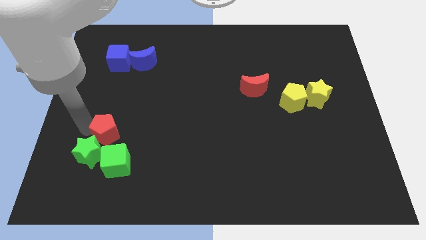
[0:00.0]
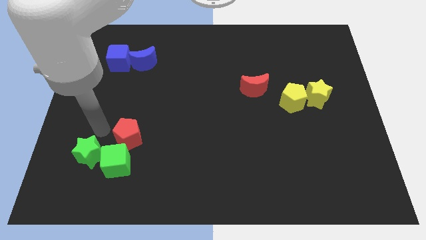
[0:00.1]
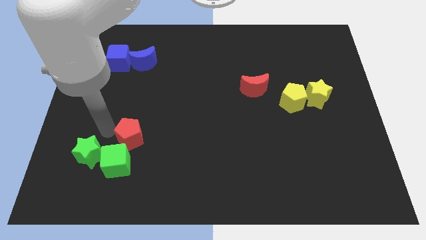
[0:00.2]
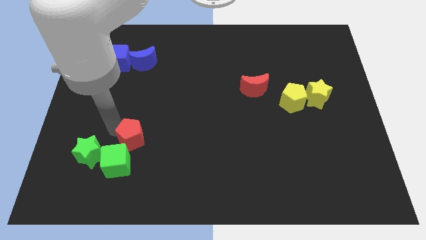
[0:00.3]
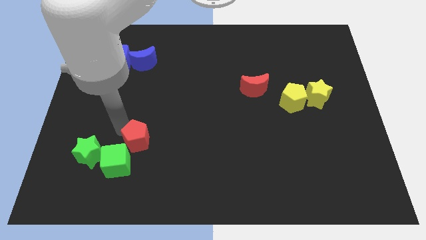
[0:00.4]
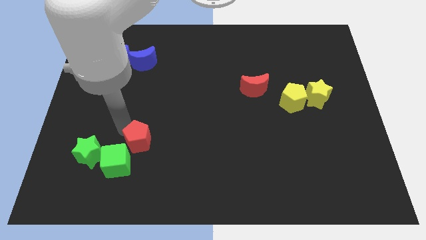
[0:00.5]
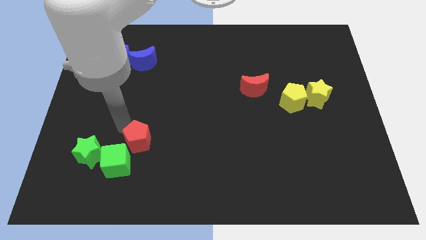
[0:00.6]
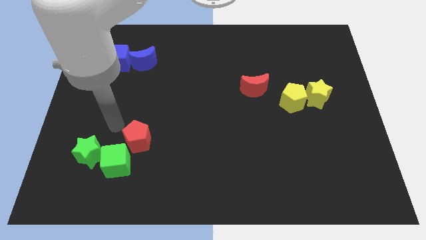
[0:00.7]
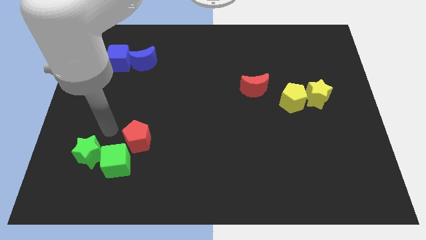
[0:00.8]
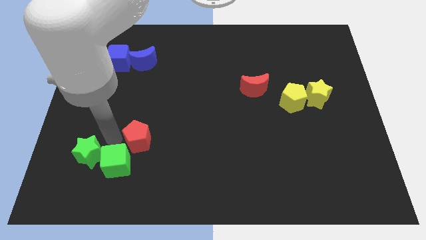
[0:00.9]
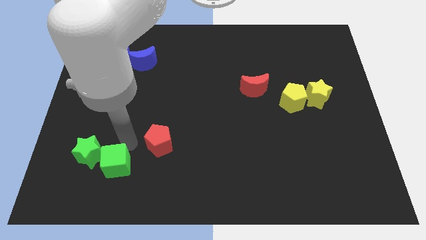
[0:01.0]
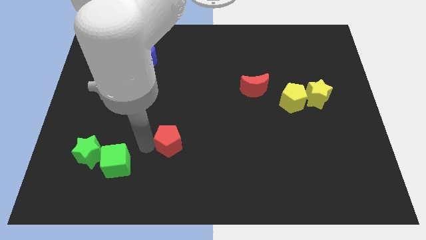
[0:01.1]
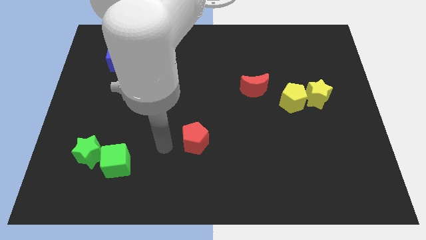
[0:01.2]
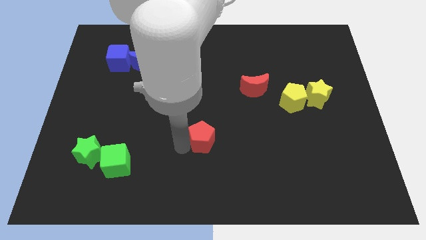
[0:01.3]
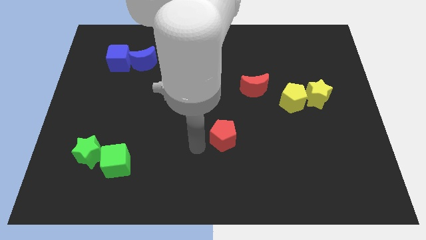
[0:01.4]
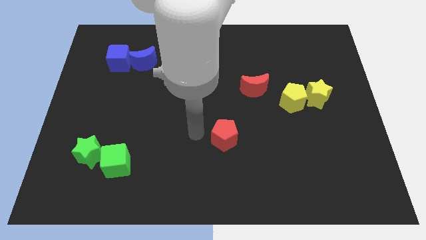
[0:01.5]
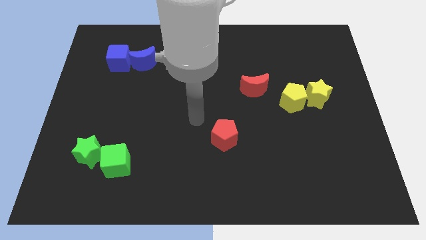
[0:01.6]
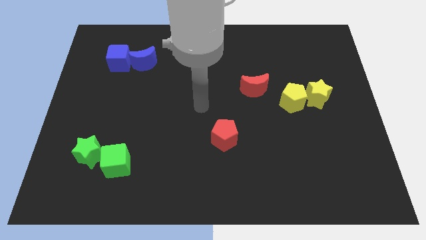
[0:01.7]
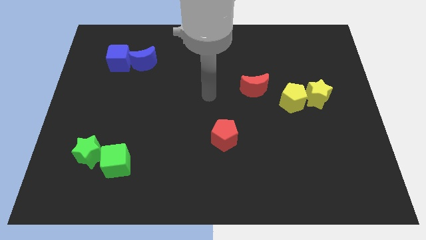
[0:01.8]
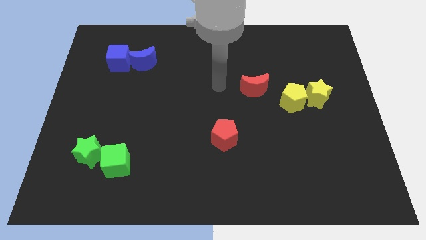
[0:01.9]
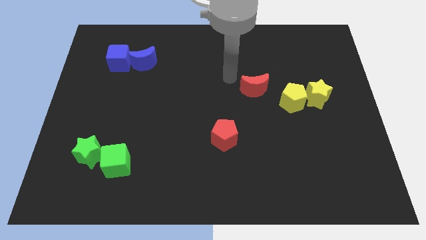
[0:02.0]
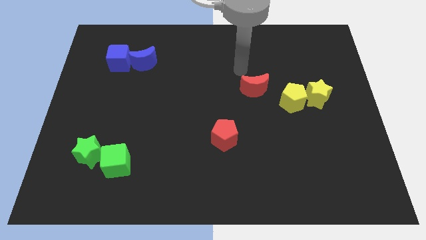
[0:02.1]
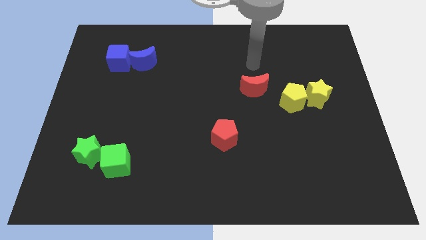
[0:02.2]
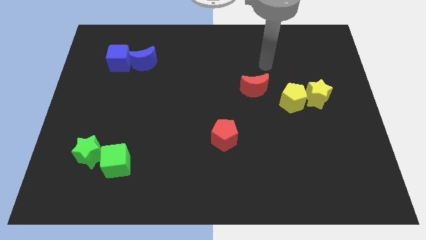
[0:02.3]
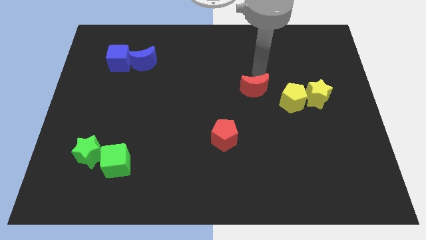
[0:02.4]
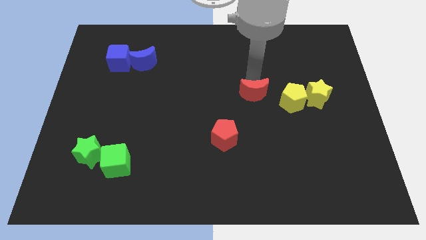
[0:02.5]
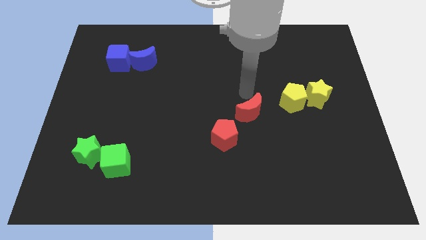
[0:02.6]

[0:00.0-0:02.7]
push red crescent beside yellow pentagon

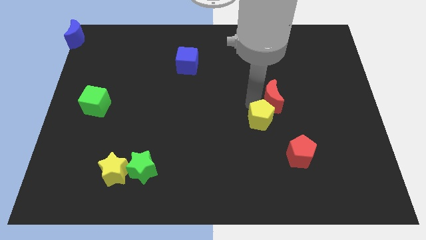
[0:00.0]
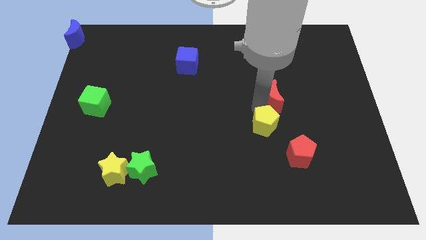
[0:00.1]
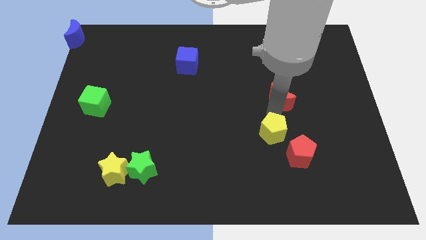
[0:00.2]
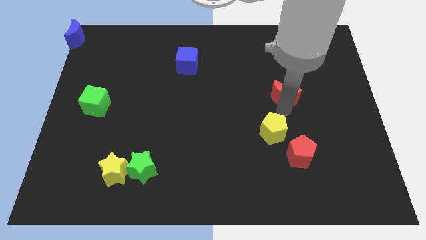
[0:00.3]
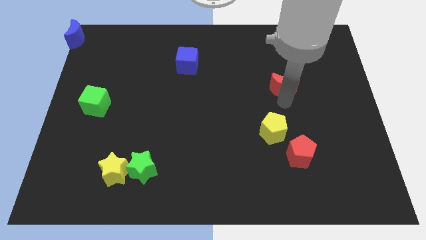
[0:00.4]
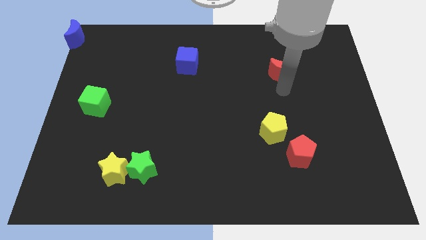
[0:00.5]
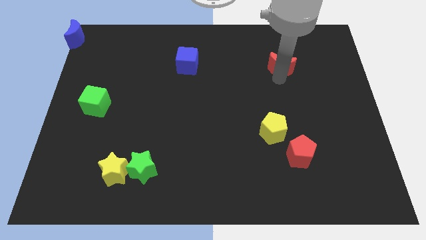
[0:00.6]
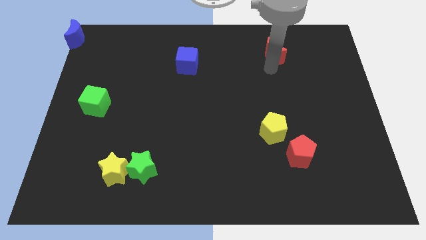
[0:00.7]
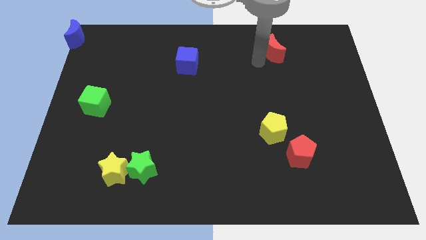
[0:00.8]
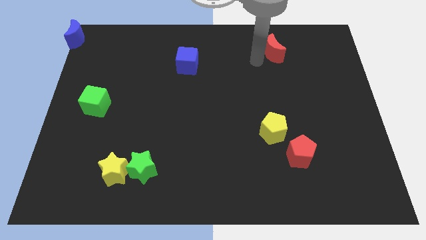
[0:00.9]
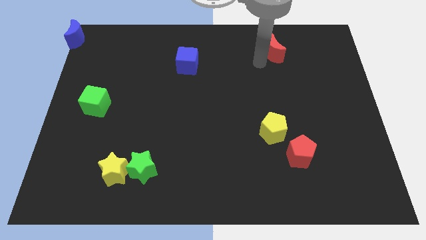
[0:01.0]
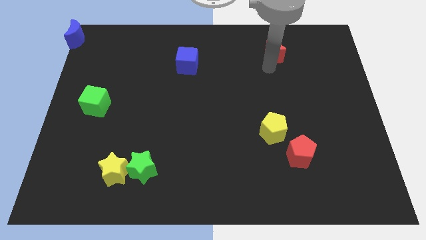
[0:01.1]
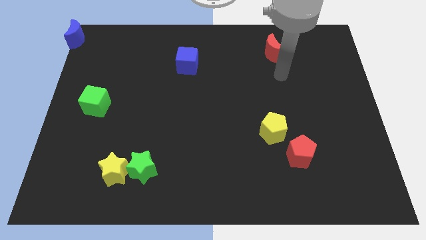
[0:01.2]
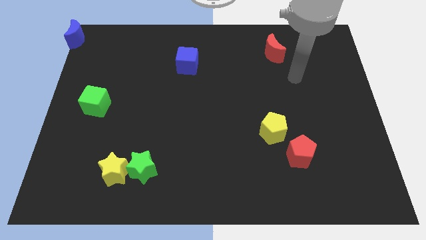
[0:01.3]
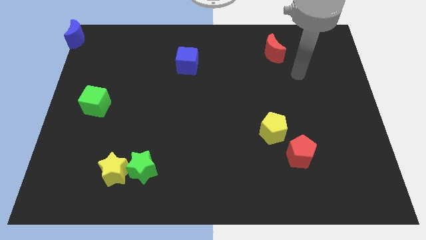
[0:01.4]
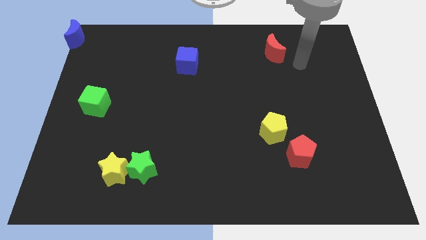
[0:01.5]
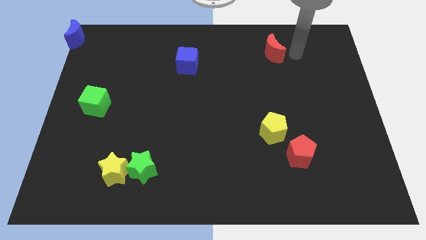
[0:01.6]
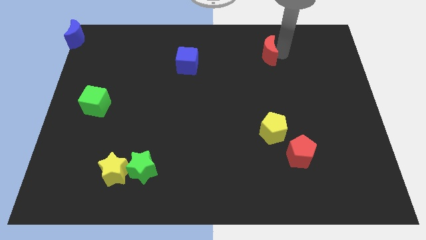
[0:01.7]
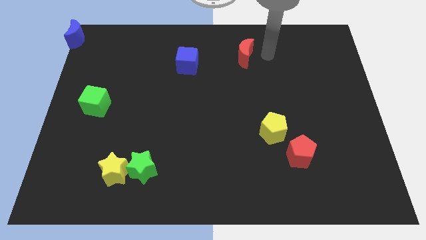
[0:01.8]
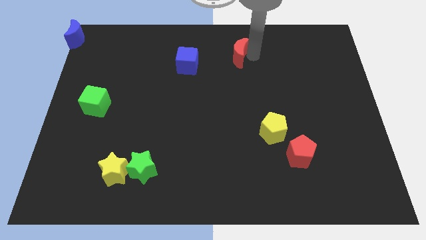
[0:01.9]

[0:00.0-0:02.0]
place the red moon right to the blue cube

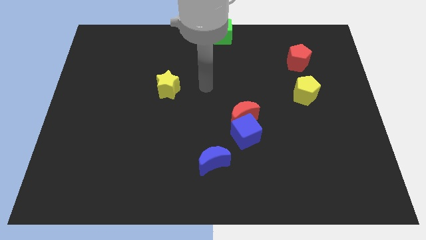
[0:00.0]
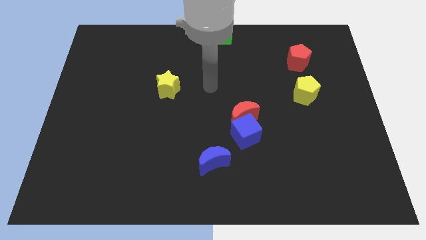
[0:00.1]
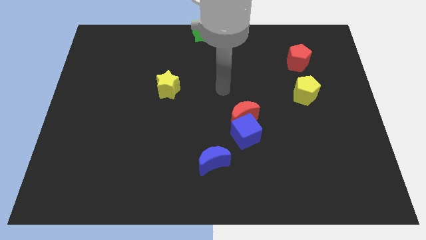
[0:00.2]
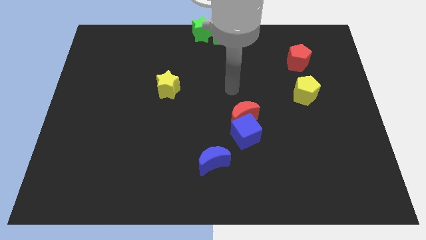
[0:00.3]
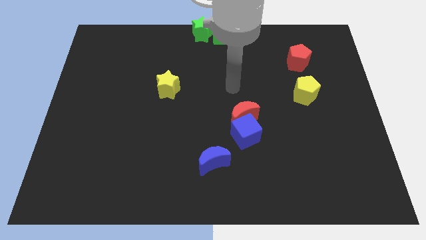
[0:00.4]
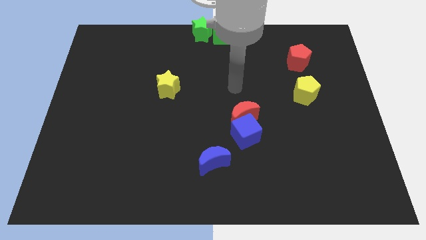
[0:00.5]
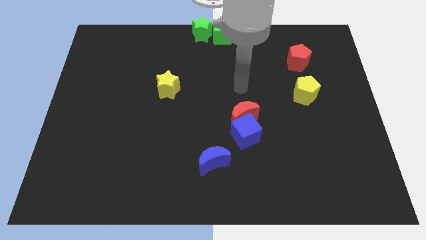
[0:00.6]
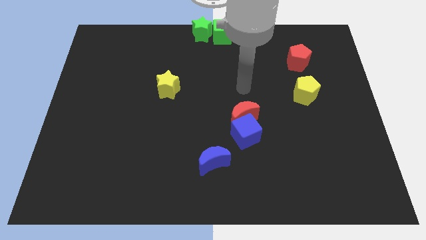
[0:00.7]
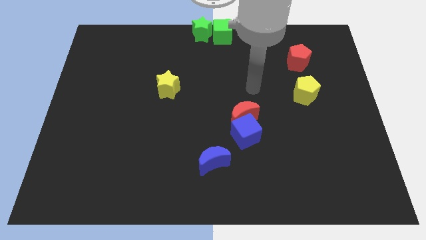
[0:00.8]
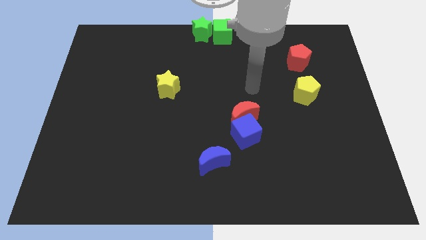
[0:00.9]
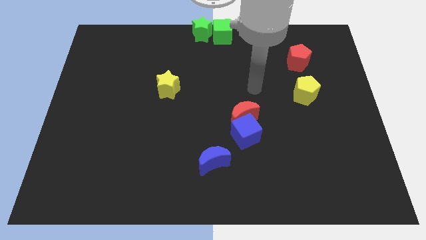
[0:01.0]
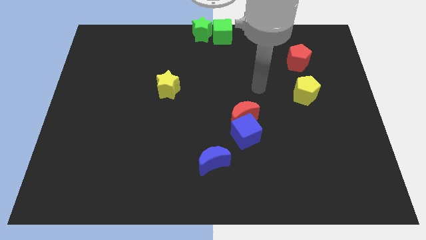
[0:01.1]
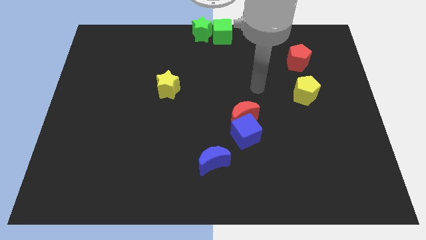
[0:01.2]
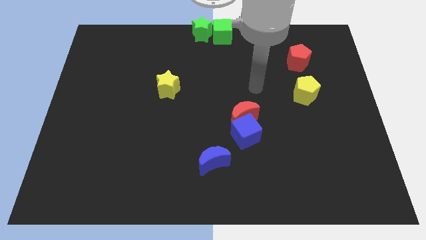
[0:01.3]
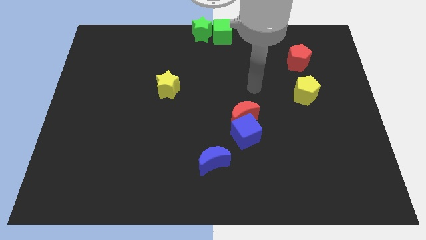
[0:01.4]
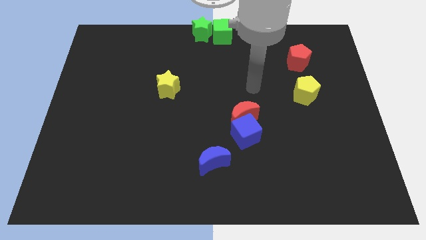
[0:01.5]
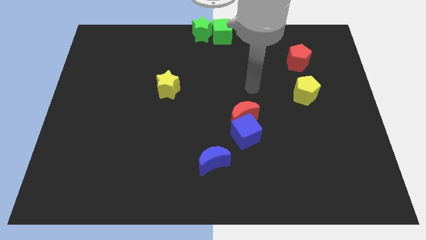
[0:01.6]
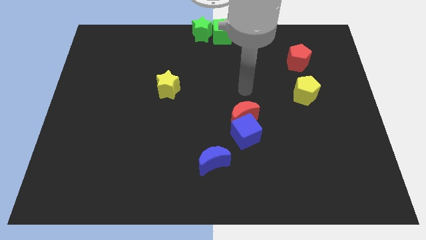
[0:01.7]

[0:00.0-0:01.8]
move your arm to the top of the red moon

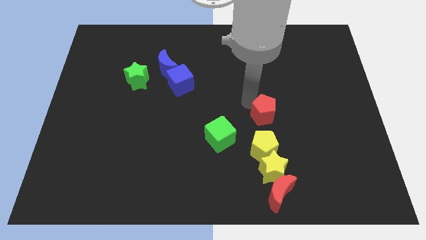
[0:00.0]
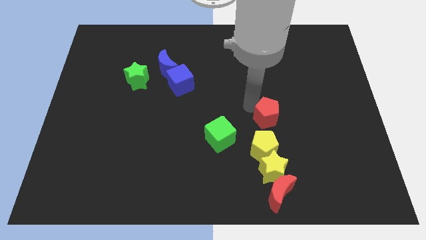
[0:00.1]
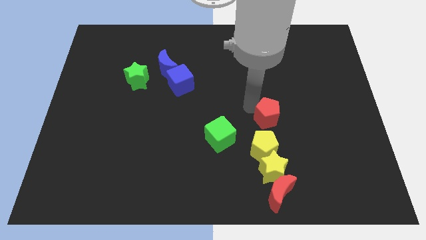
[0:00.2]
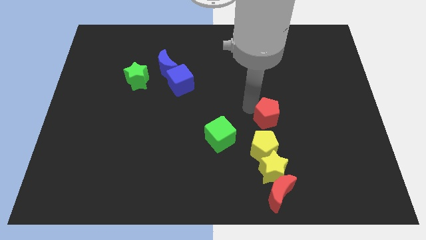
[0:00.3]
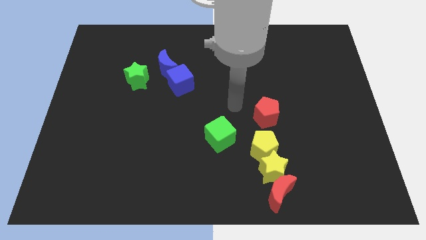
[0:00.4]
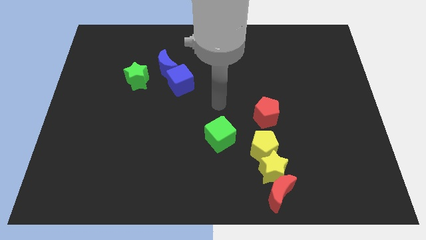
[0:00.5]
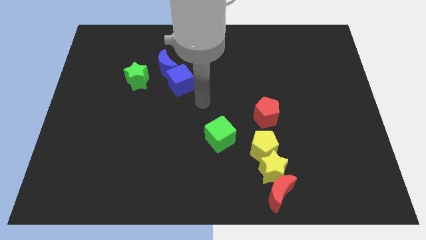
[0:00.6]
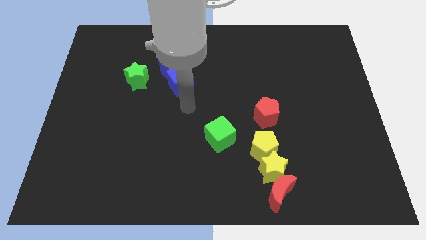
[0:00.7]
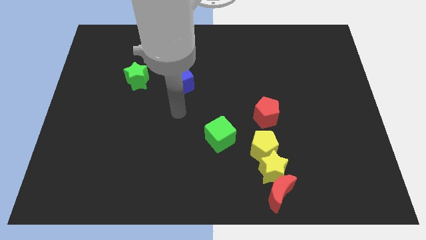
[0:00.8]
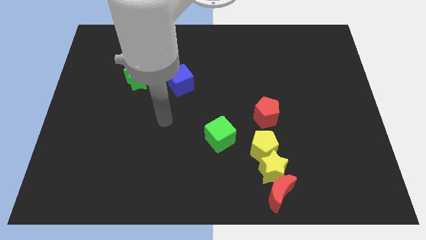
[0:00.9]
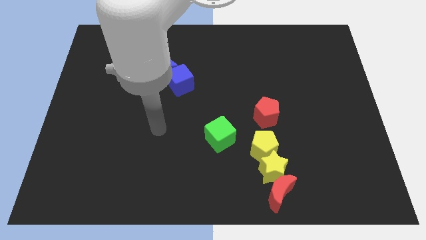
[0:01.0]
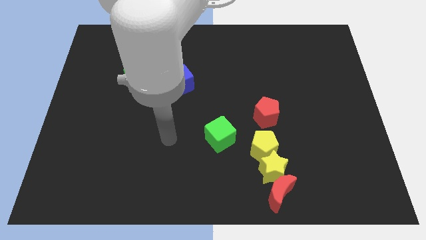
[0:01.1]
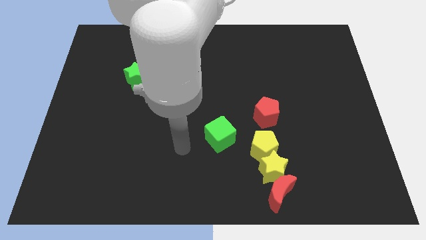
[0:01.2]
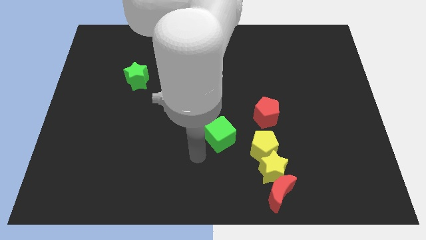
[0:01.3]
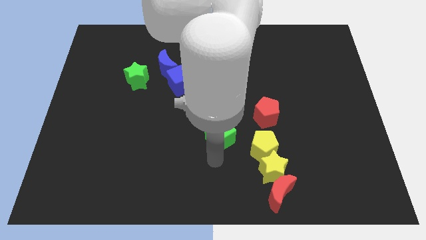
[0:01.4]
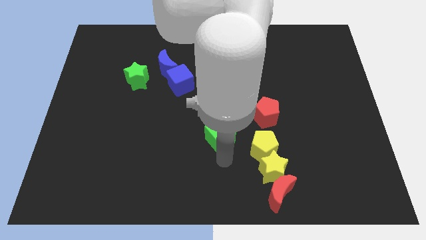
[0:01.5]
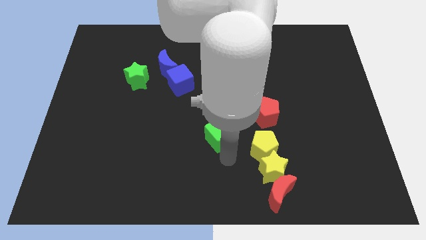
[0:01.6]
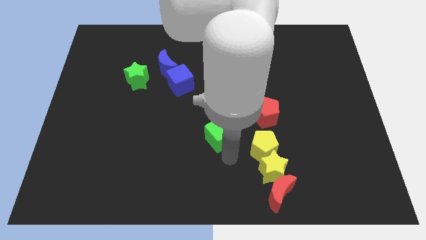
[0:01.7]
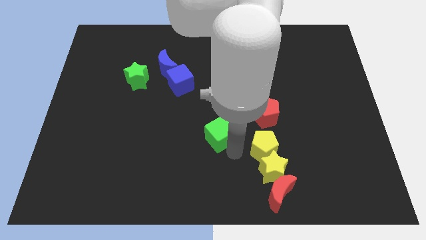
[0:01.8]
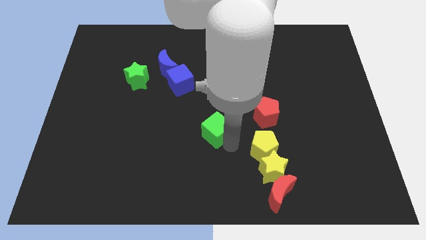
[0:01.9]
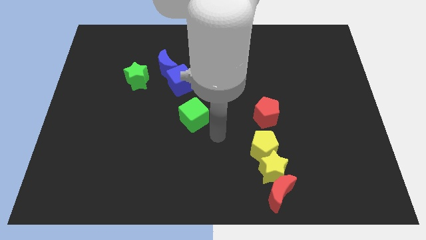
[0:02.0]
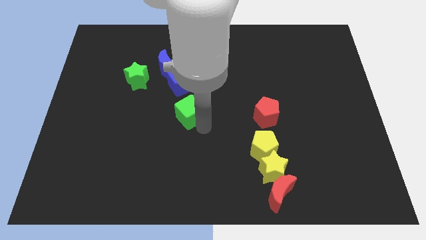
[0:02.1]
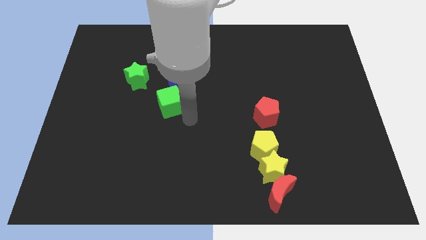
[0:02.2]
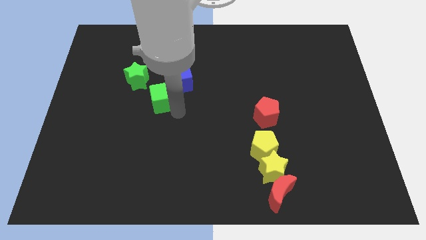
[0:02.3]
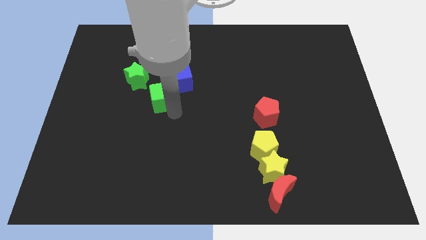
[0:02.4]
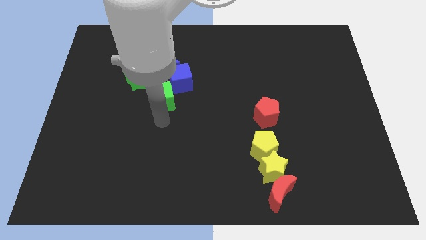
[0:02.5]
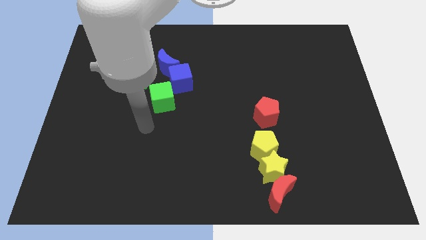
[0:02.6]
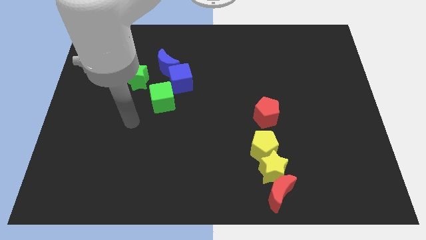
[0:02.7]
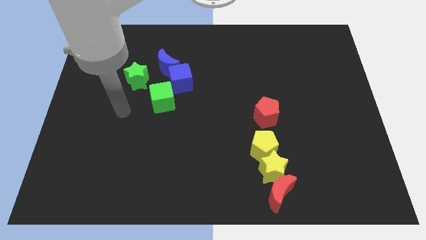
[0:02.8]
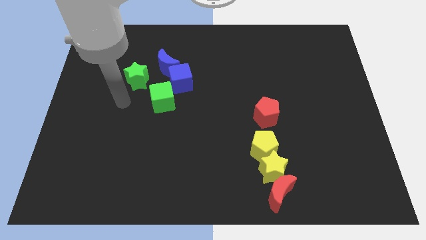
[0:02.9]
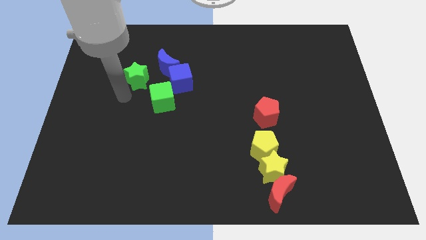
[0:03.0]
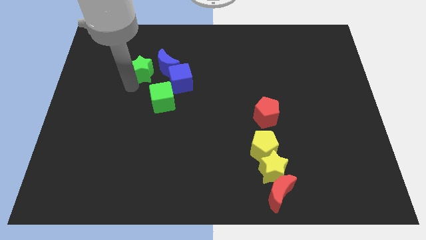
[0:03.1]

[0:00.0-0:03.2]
put the green cube to the bottom left of the blue cube
